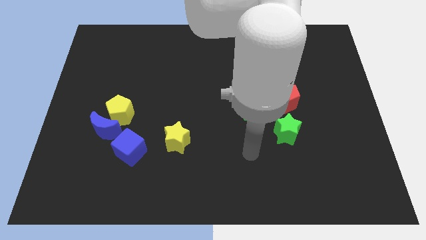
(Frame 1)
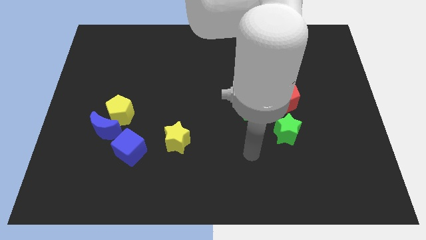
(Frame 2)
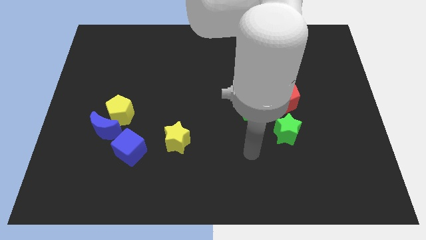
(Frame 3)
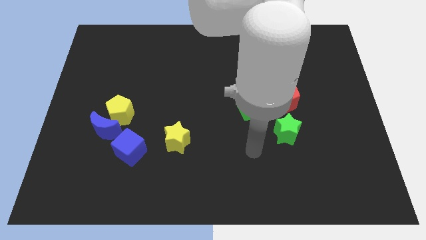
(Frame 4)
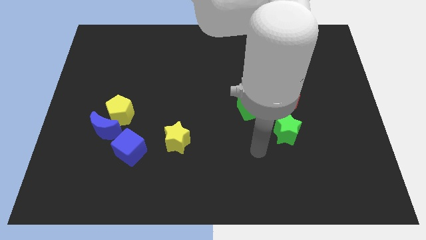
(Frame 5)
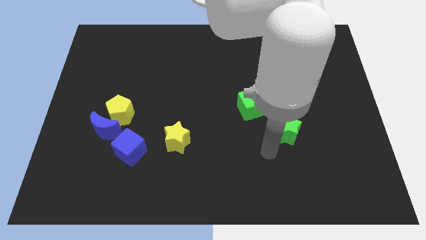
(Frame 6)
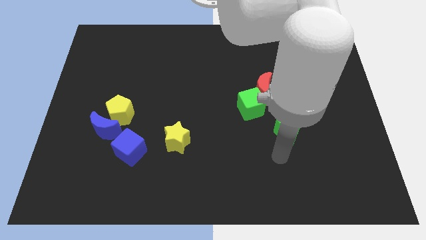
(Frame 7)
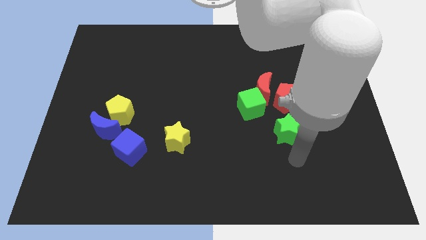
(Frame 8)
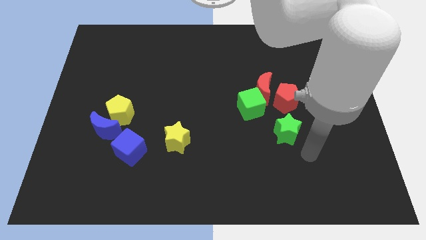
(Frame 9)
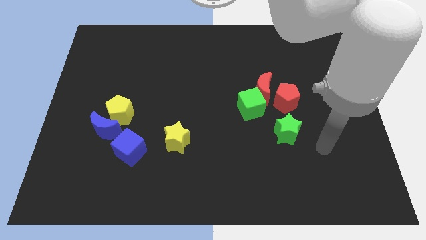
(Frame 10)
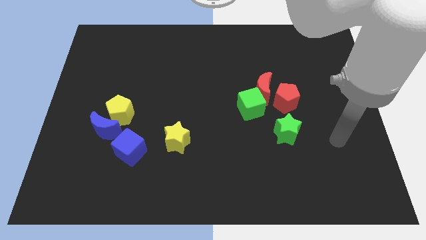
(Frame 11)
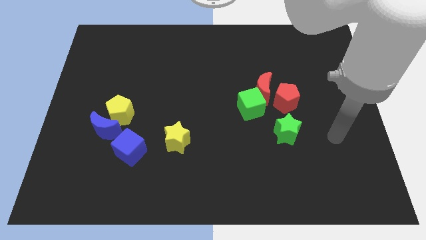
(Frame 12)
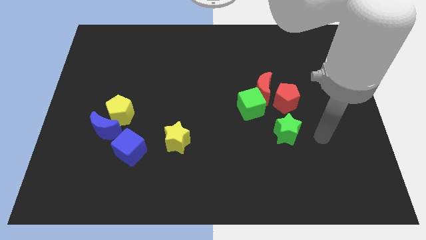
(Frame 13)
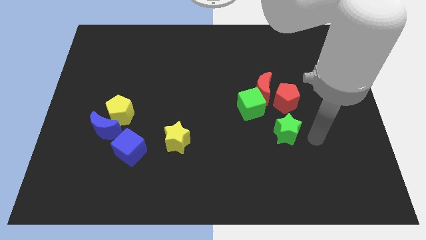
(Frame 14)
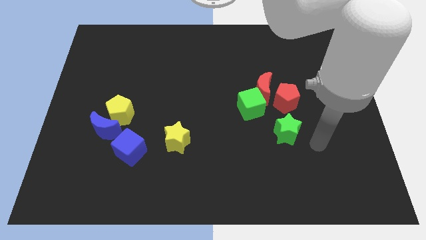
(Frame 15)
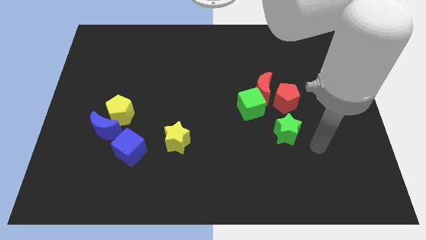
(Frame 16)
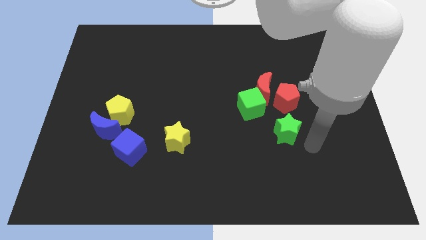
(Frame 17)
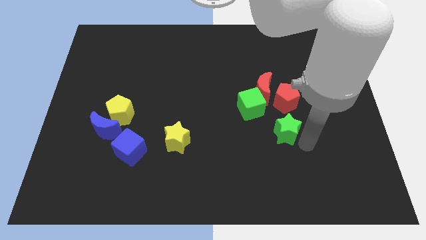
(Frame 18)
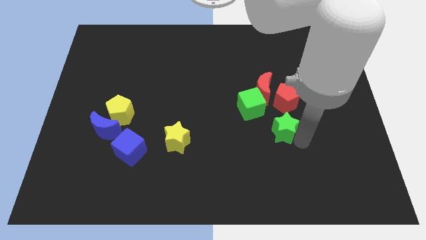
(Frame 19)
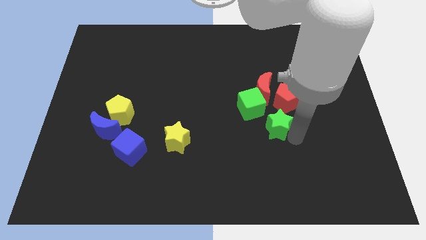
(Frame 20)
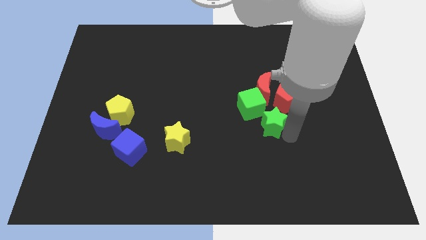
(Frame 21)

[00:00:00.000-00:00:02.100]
push the green star to the bottom of the green cube

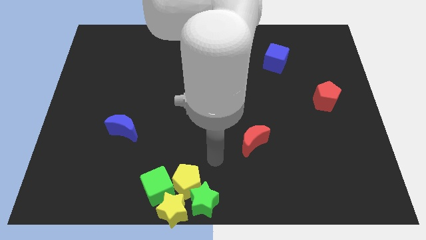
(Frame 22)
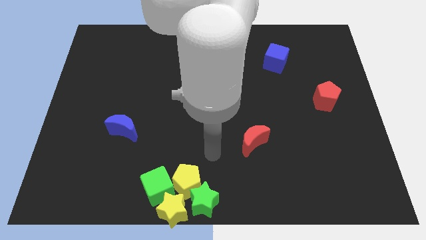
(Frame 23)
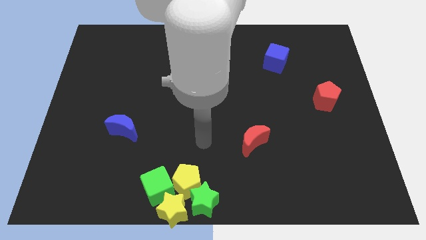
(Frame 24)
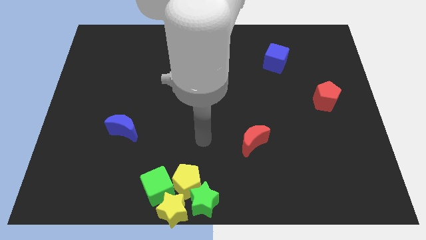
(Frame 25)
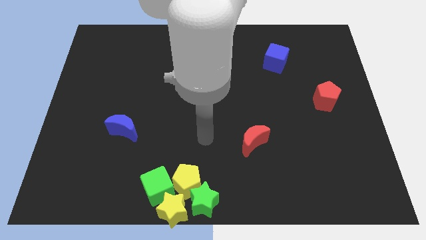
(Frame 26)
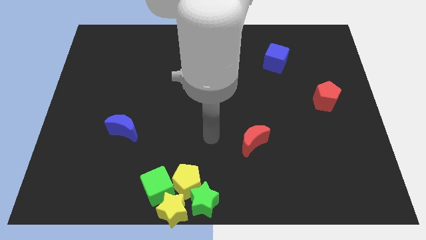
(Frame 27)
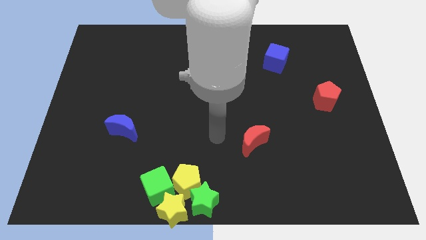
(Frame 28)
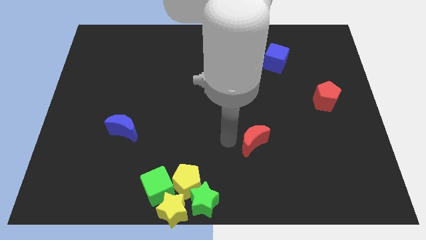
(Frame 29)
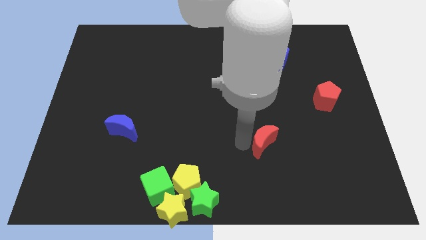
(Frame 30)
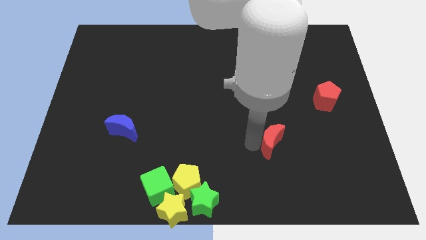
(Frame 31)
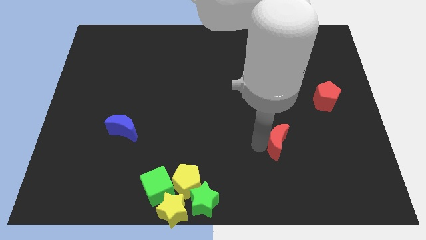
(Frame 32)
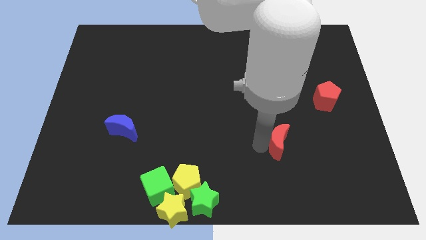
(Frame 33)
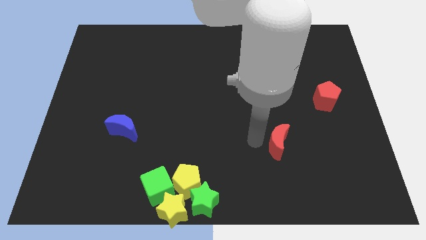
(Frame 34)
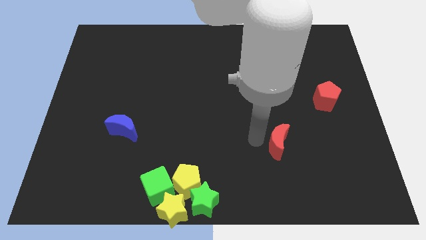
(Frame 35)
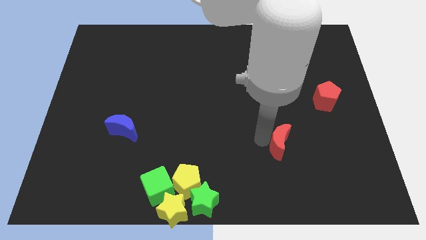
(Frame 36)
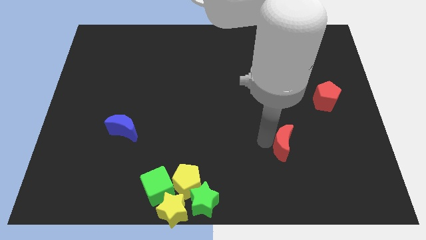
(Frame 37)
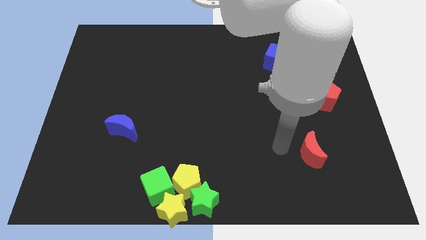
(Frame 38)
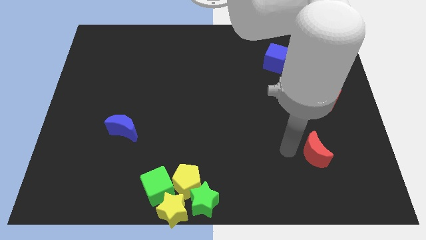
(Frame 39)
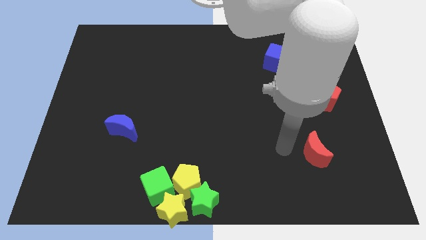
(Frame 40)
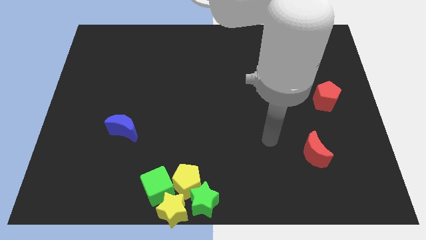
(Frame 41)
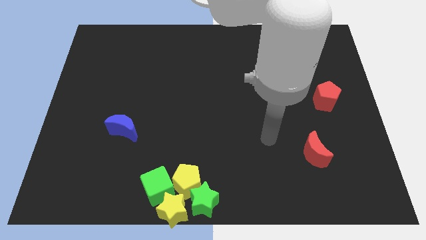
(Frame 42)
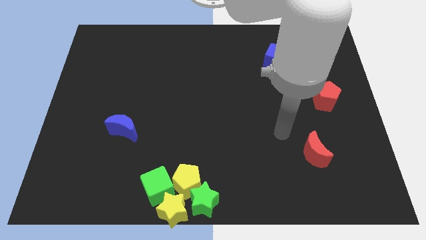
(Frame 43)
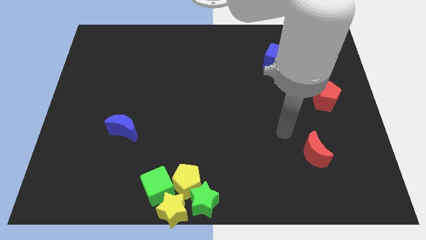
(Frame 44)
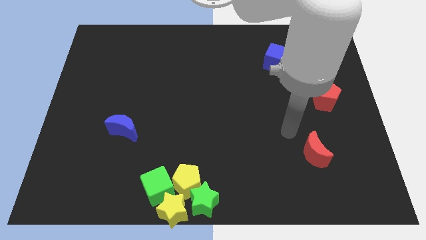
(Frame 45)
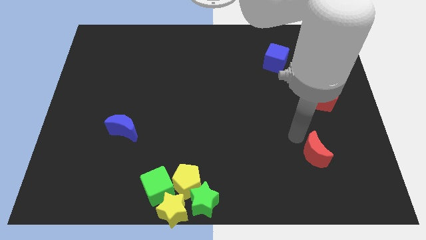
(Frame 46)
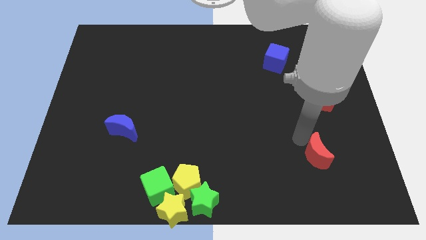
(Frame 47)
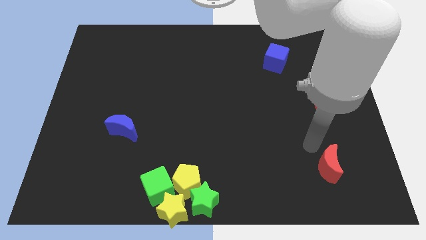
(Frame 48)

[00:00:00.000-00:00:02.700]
drag the red moon diagonally top right to green star

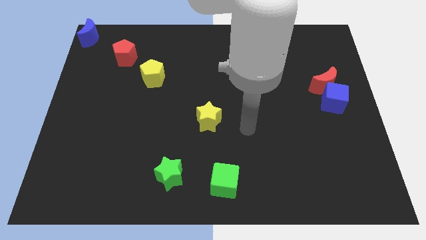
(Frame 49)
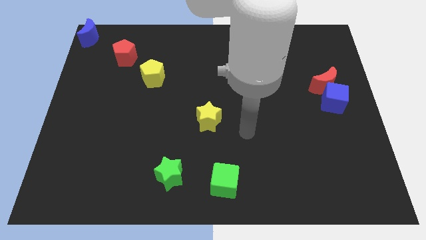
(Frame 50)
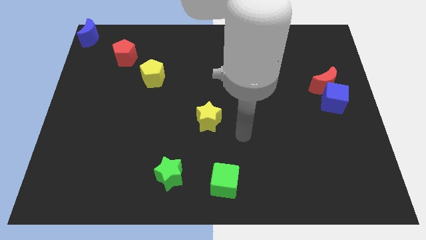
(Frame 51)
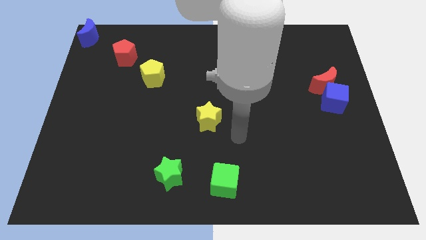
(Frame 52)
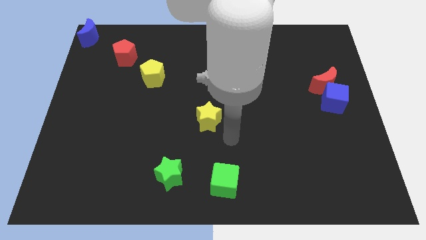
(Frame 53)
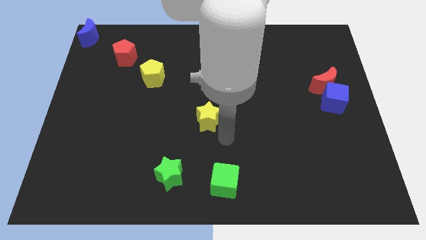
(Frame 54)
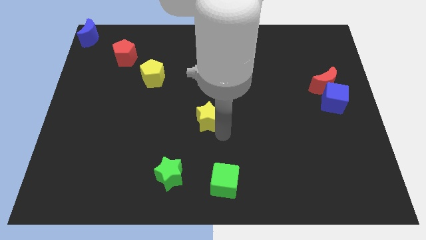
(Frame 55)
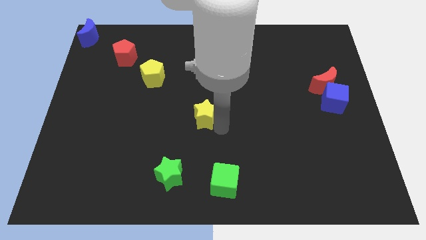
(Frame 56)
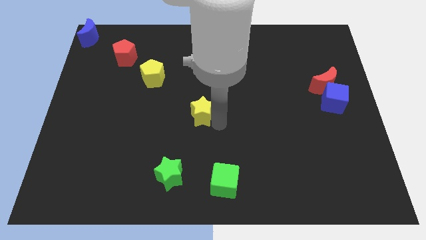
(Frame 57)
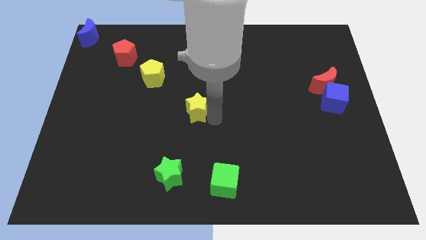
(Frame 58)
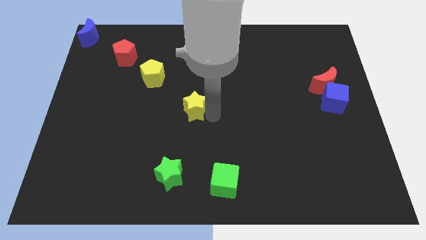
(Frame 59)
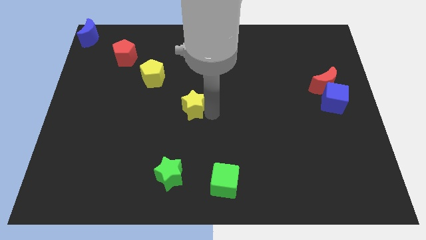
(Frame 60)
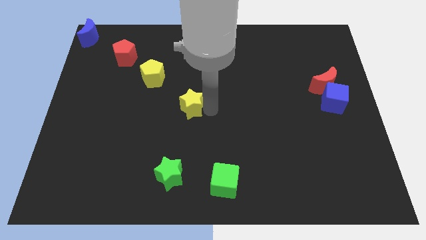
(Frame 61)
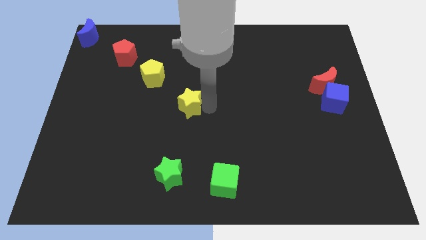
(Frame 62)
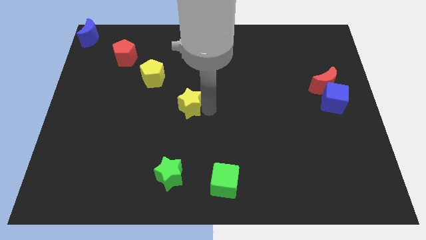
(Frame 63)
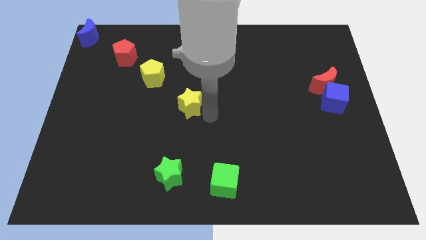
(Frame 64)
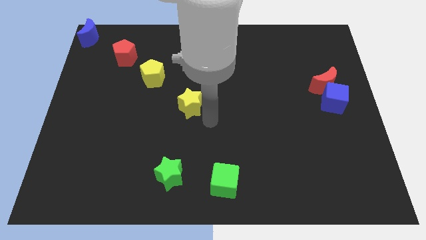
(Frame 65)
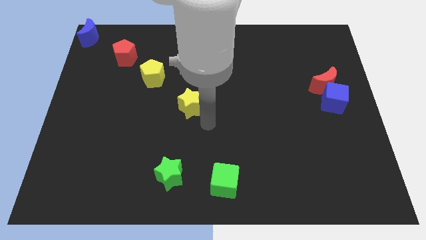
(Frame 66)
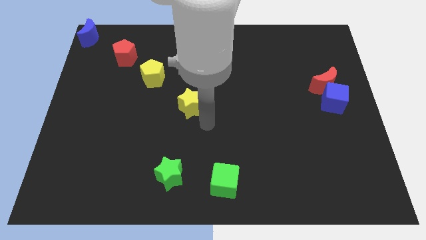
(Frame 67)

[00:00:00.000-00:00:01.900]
move the yellow star parallel to the yellow pentagon

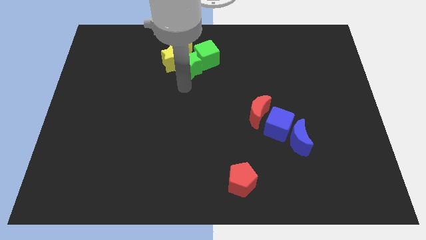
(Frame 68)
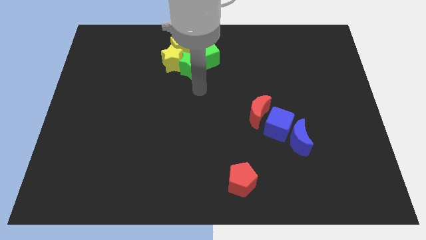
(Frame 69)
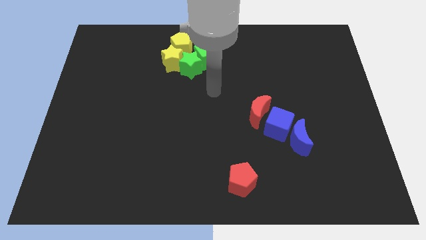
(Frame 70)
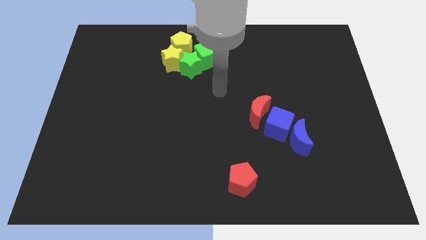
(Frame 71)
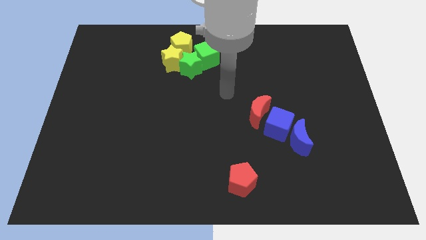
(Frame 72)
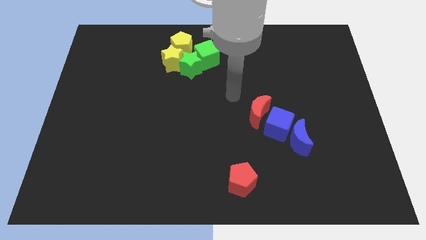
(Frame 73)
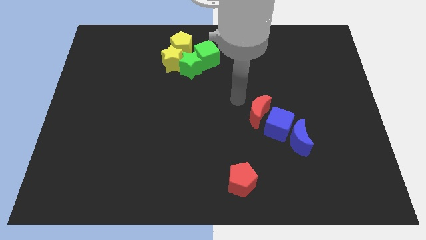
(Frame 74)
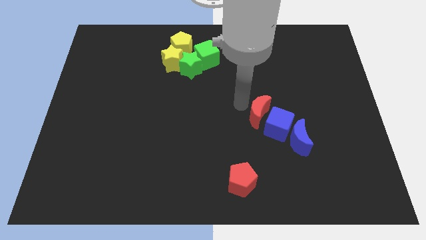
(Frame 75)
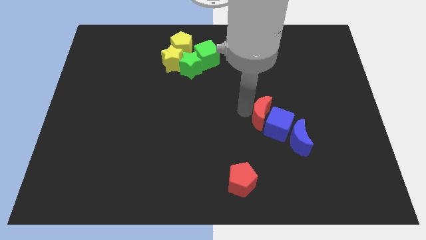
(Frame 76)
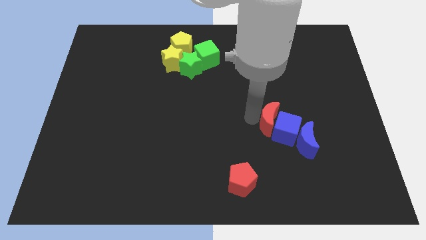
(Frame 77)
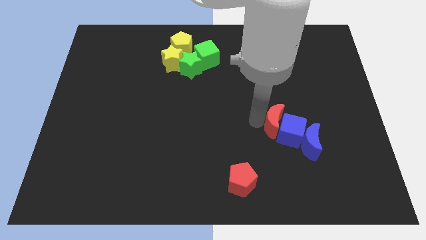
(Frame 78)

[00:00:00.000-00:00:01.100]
push the red crescent into the blue cube

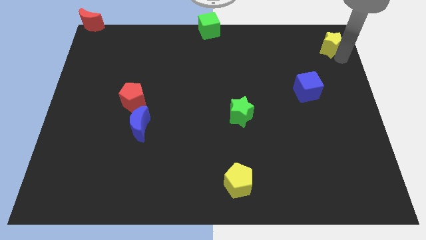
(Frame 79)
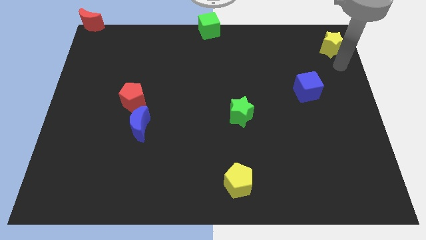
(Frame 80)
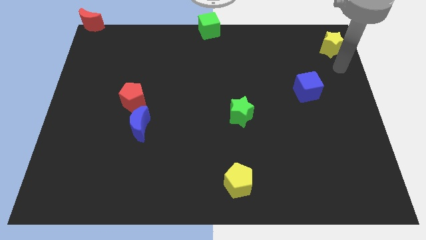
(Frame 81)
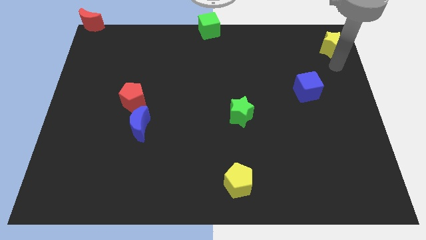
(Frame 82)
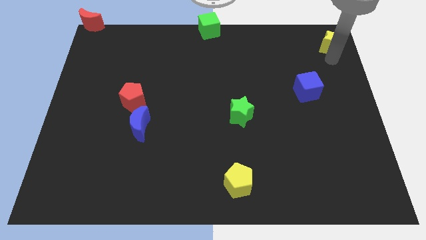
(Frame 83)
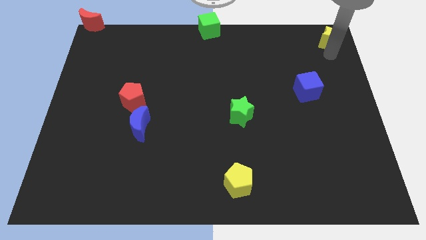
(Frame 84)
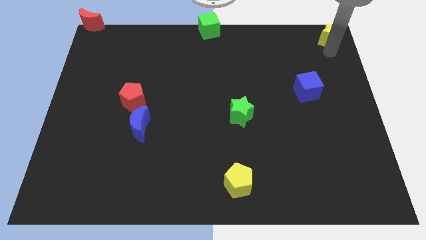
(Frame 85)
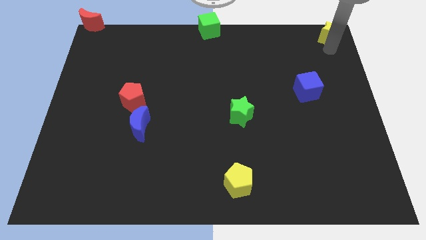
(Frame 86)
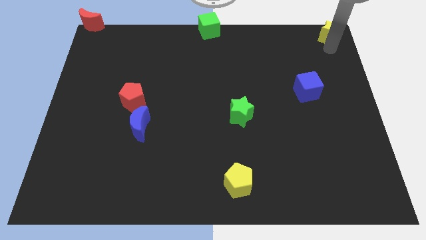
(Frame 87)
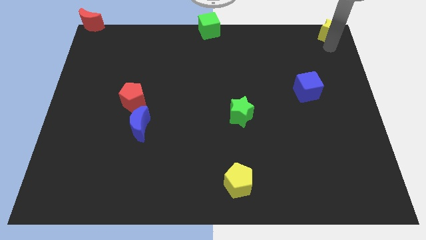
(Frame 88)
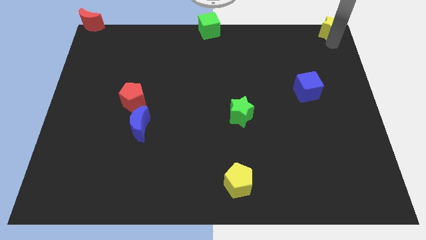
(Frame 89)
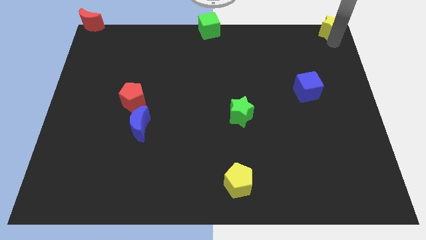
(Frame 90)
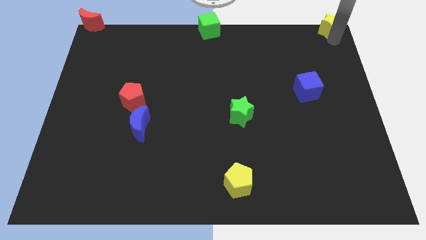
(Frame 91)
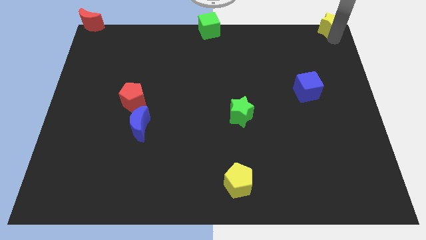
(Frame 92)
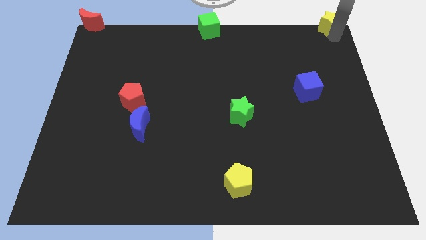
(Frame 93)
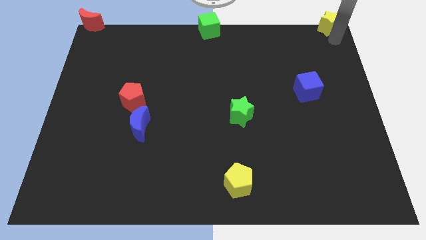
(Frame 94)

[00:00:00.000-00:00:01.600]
move the yellow star to the top right of the board
